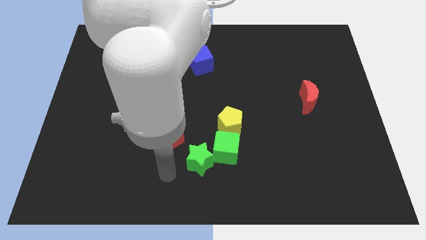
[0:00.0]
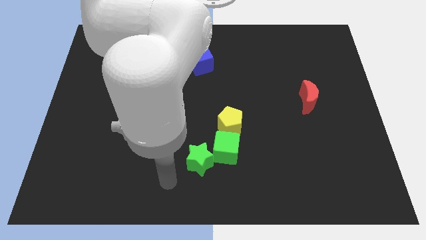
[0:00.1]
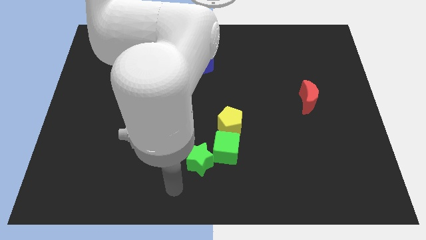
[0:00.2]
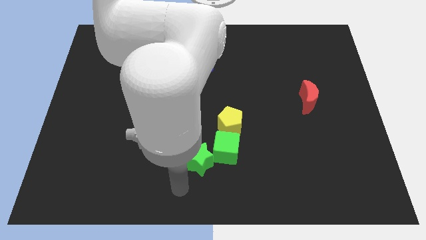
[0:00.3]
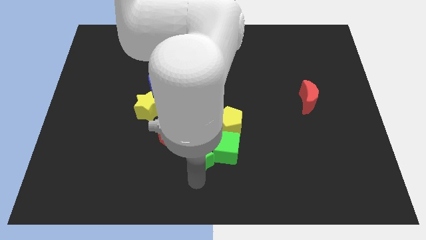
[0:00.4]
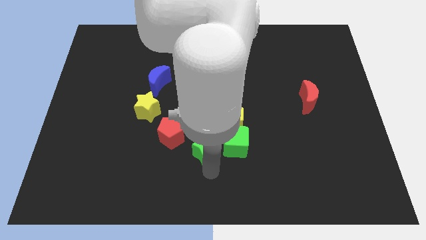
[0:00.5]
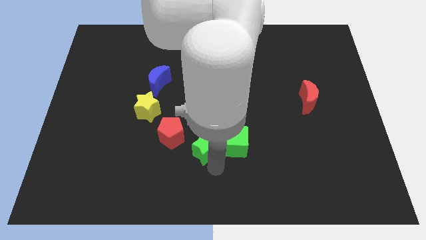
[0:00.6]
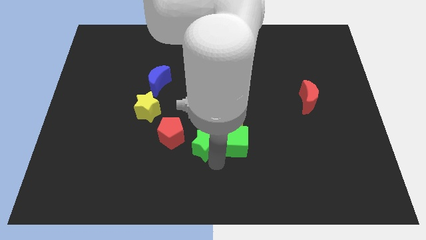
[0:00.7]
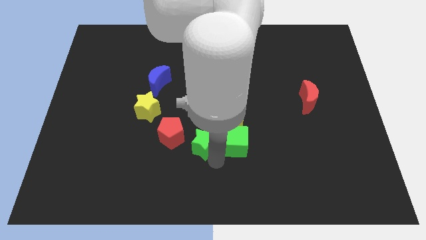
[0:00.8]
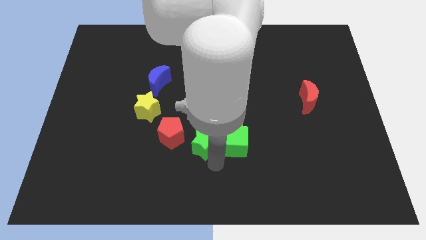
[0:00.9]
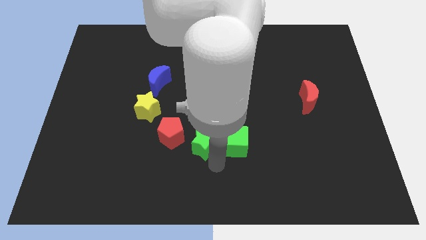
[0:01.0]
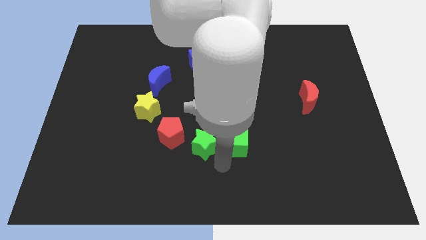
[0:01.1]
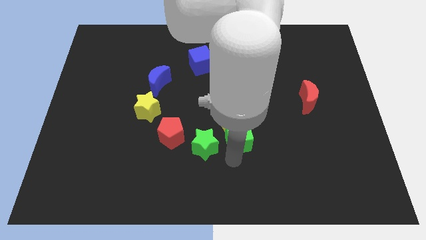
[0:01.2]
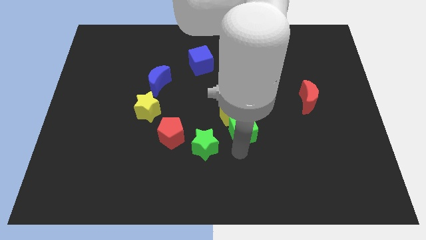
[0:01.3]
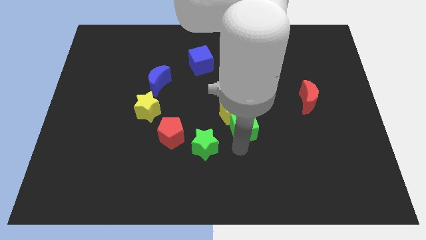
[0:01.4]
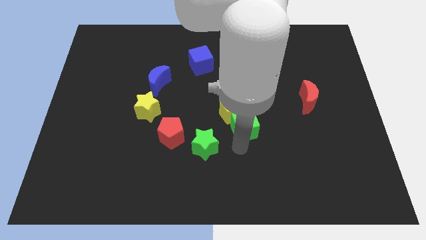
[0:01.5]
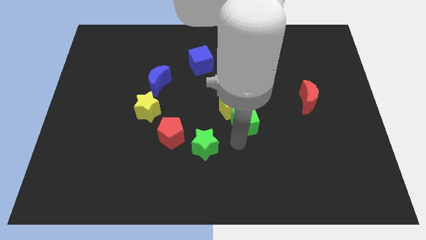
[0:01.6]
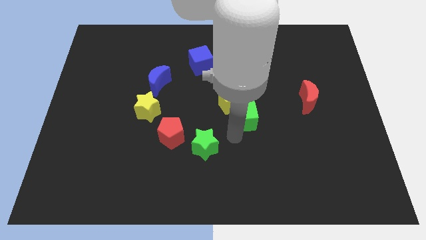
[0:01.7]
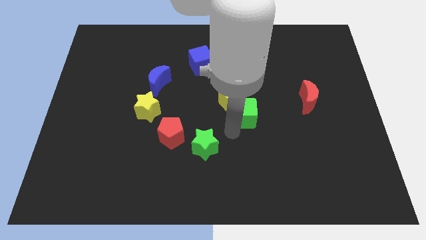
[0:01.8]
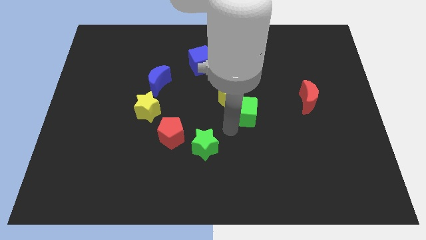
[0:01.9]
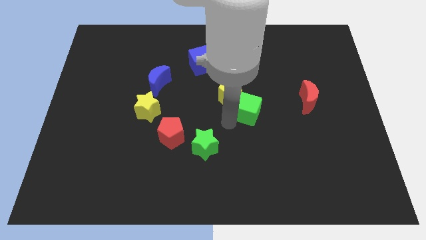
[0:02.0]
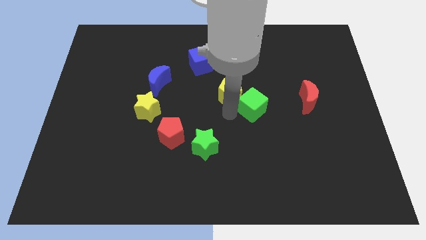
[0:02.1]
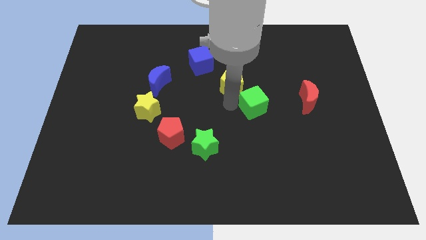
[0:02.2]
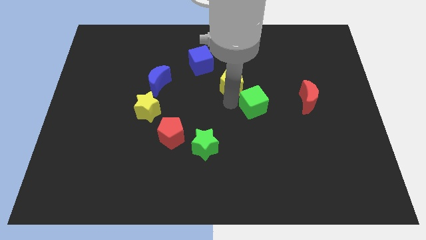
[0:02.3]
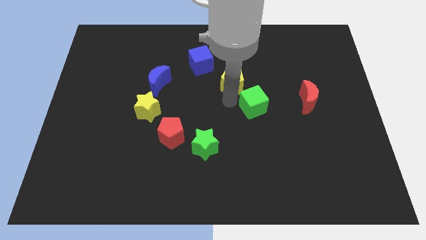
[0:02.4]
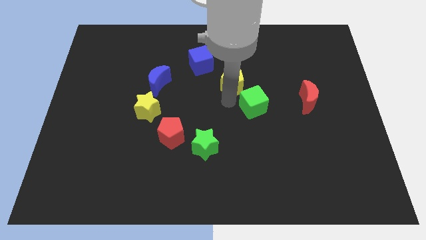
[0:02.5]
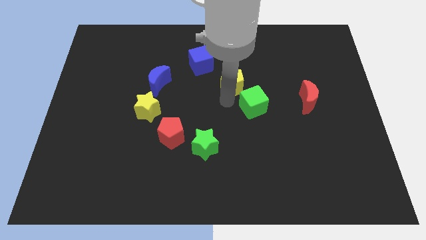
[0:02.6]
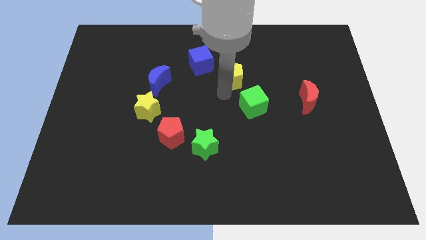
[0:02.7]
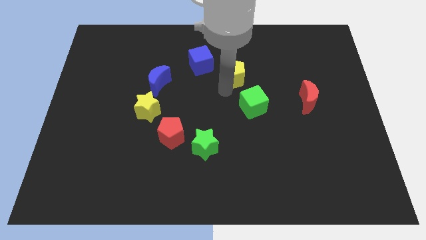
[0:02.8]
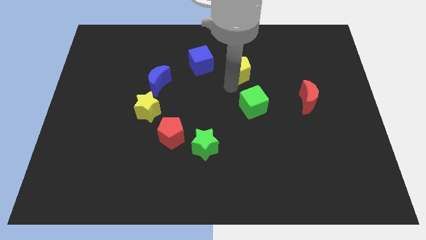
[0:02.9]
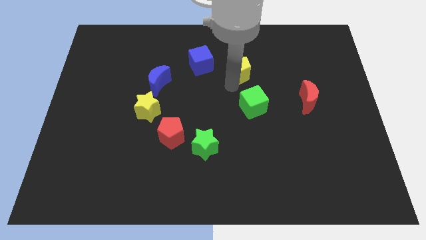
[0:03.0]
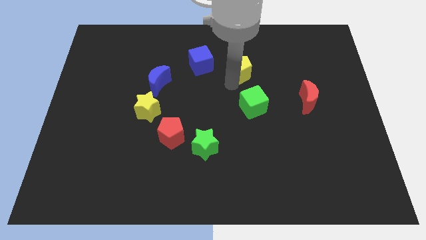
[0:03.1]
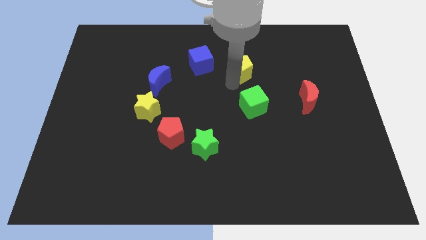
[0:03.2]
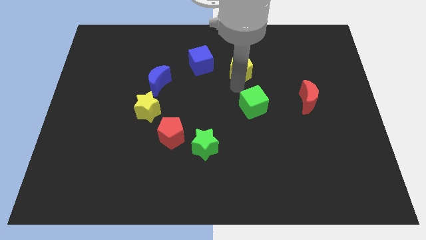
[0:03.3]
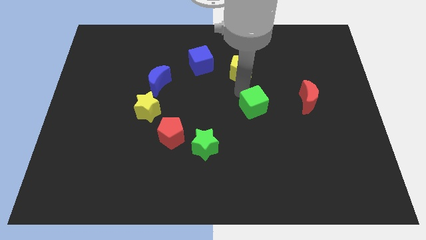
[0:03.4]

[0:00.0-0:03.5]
place the yellow pentagon above the green cube

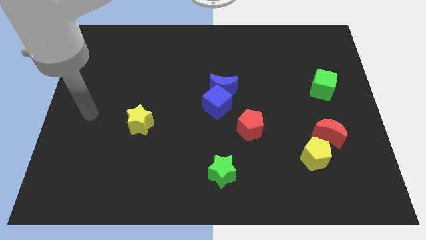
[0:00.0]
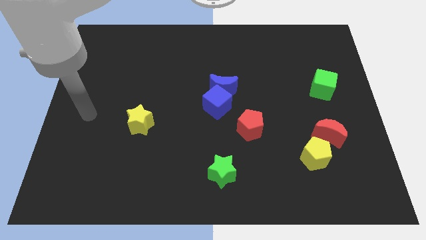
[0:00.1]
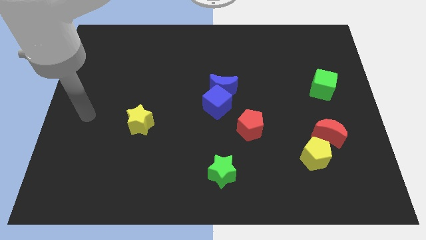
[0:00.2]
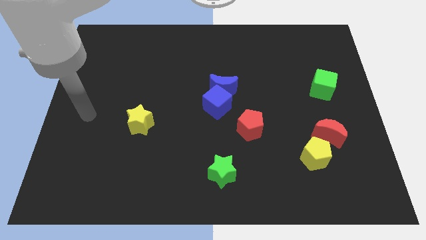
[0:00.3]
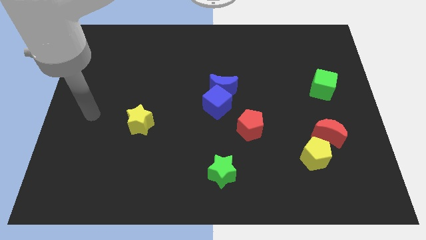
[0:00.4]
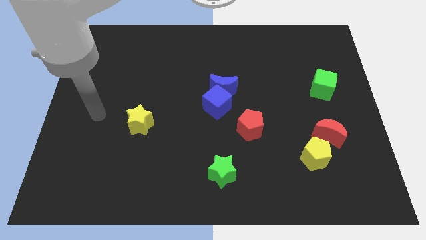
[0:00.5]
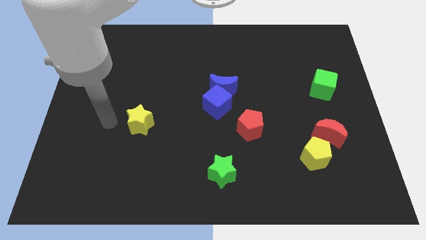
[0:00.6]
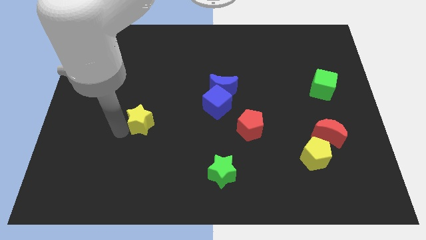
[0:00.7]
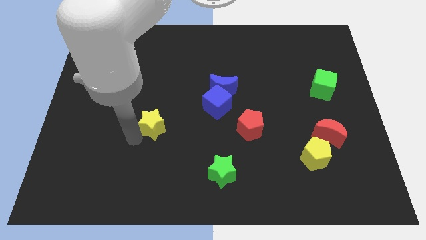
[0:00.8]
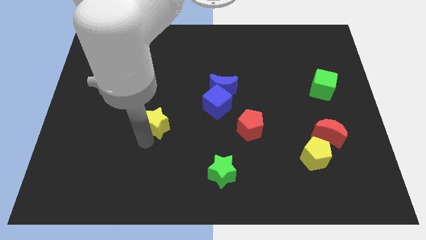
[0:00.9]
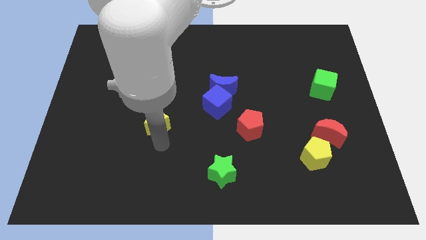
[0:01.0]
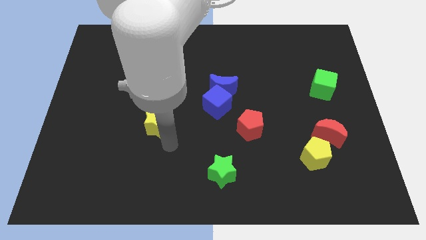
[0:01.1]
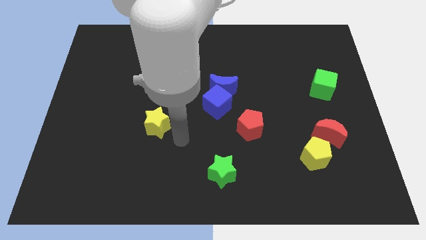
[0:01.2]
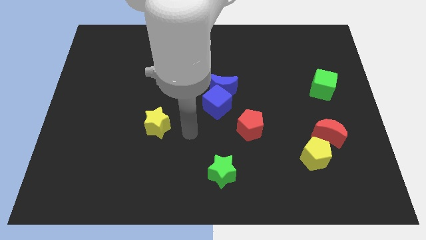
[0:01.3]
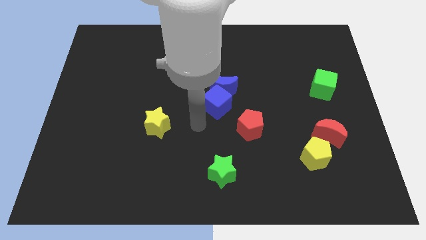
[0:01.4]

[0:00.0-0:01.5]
move your arm from left center to center of the board

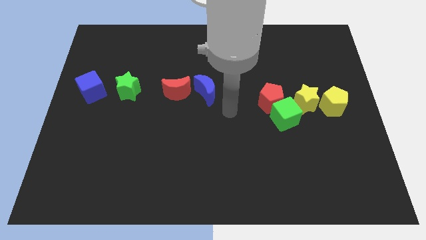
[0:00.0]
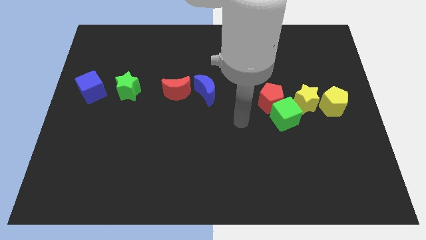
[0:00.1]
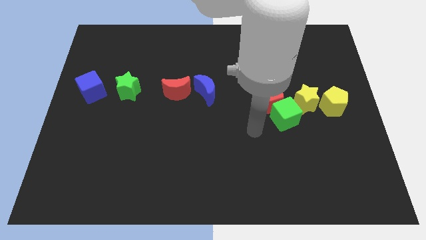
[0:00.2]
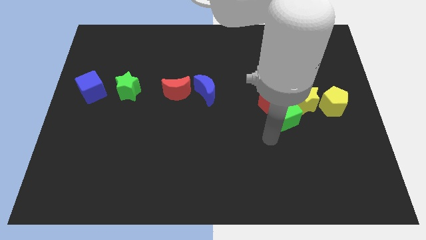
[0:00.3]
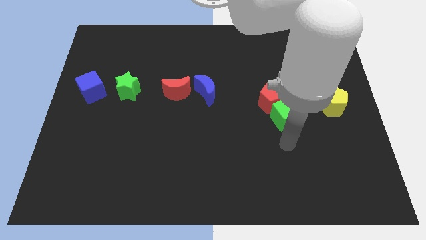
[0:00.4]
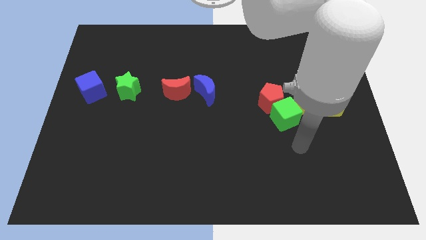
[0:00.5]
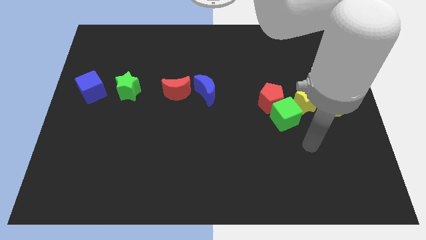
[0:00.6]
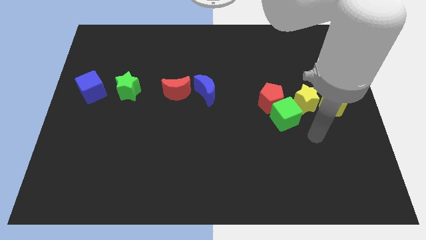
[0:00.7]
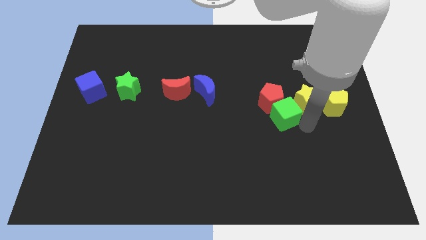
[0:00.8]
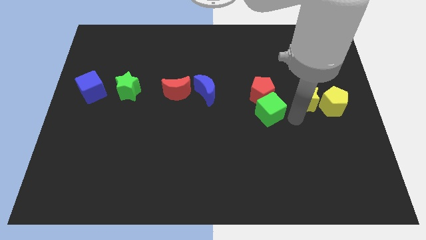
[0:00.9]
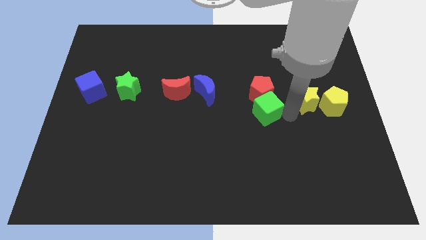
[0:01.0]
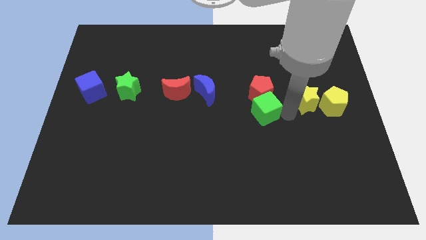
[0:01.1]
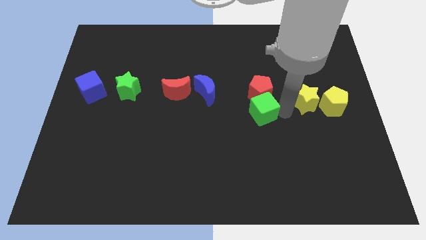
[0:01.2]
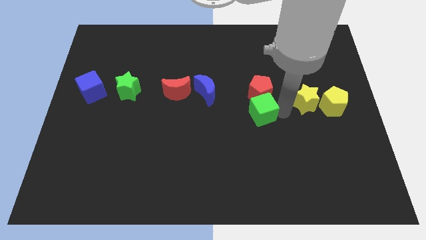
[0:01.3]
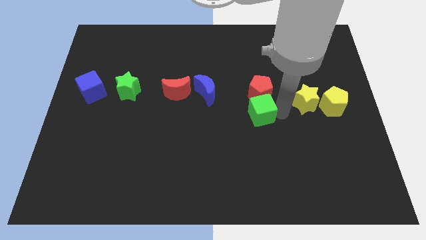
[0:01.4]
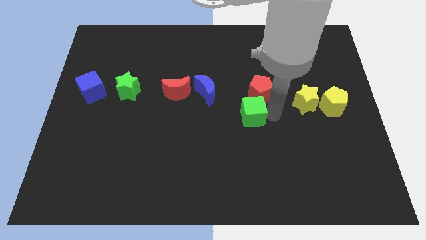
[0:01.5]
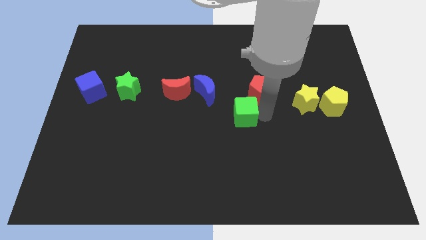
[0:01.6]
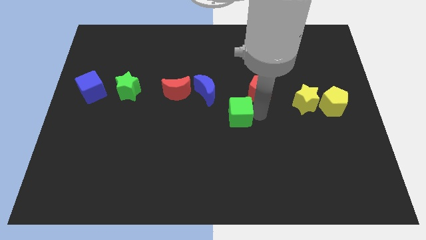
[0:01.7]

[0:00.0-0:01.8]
separate green cube from the red pentagon

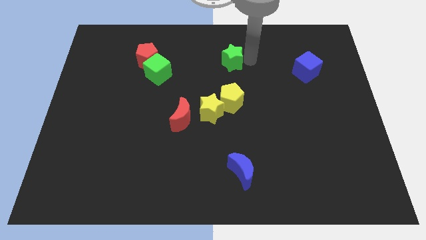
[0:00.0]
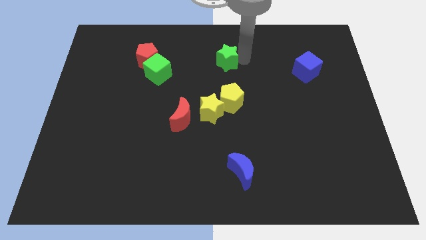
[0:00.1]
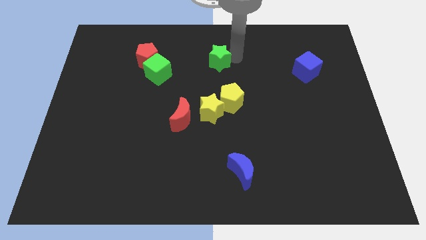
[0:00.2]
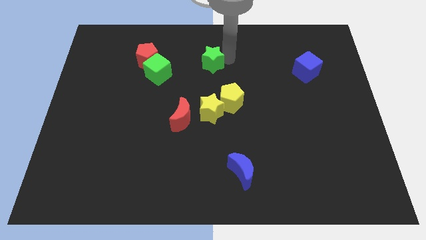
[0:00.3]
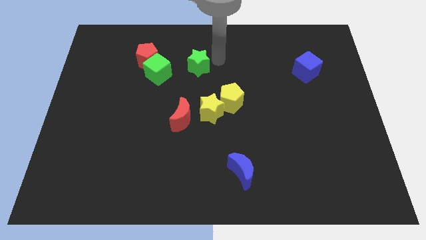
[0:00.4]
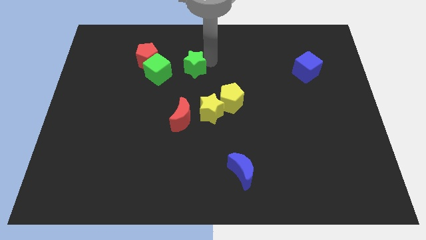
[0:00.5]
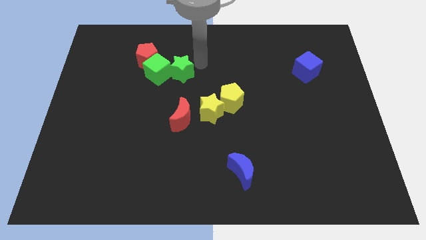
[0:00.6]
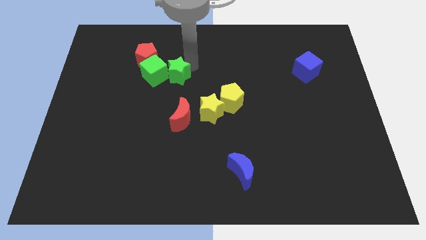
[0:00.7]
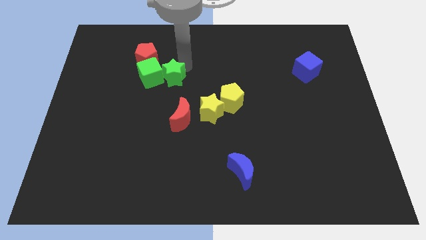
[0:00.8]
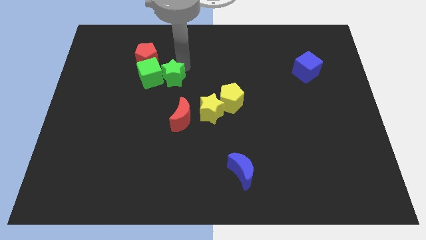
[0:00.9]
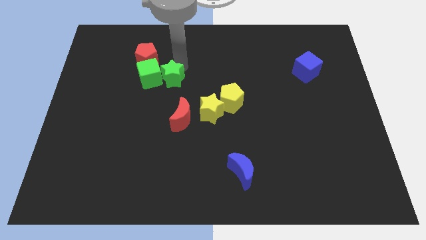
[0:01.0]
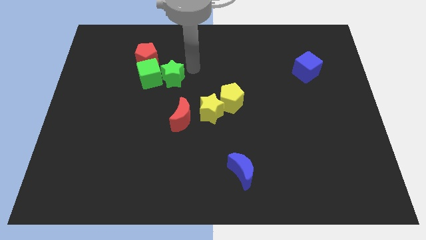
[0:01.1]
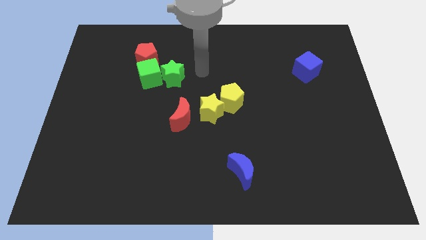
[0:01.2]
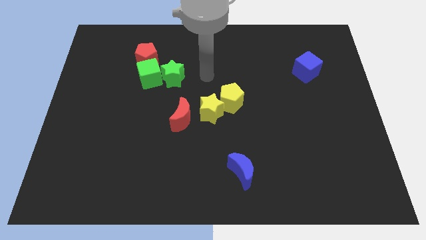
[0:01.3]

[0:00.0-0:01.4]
move the green star into green cube

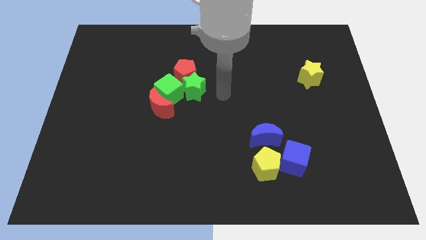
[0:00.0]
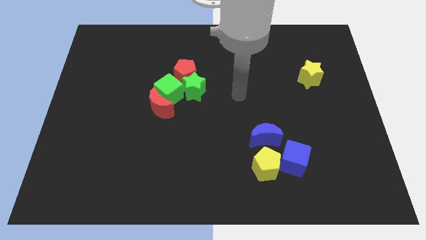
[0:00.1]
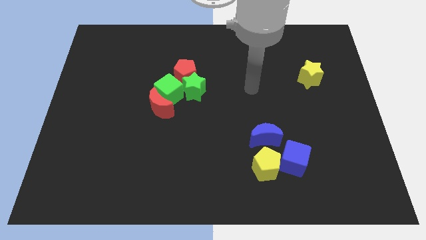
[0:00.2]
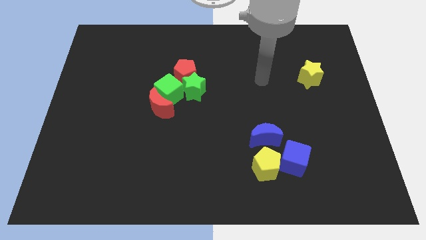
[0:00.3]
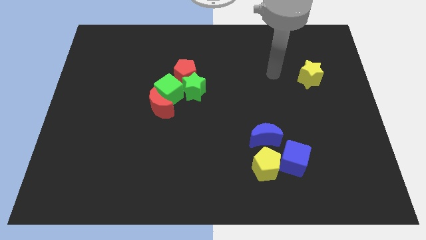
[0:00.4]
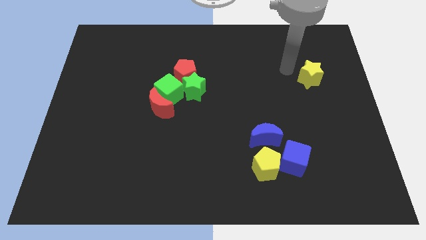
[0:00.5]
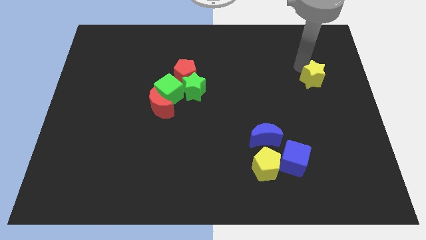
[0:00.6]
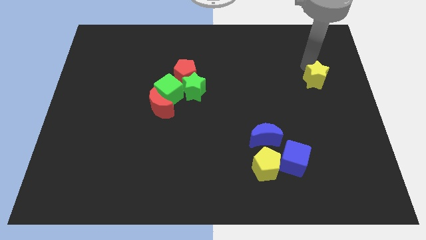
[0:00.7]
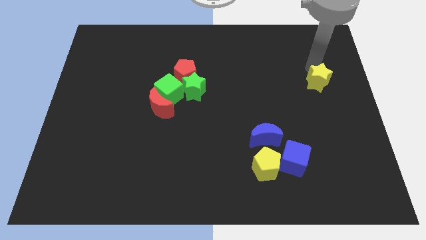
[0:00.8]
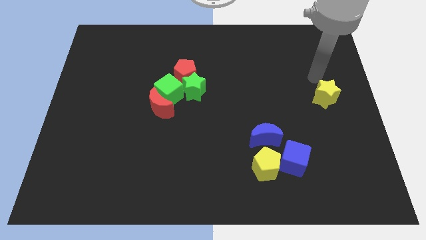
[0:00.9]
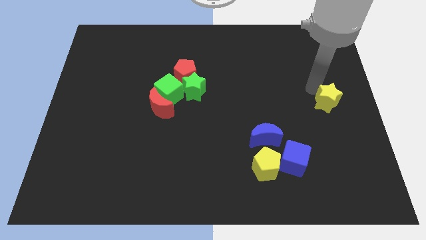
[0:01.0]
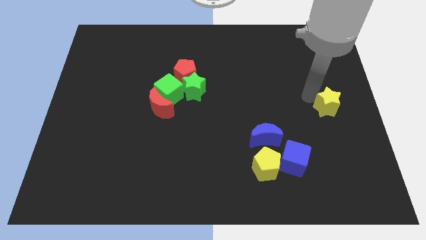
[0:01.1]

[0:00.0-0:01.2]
slightly push the yellow star to the right of the board
